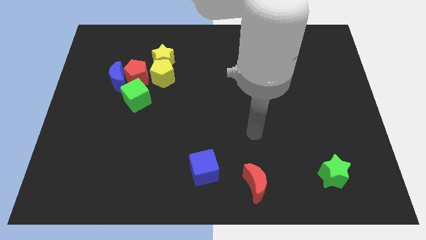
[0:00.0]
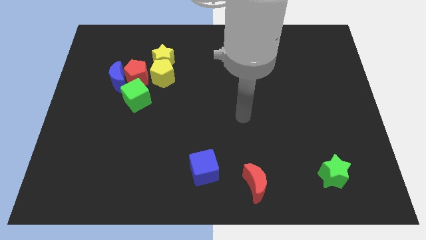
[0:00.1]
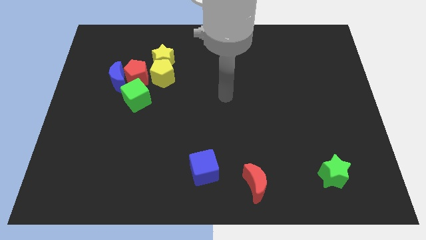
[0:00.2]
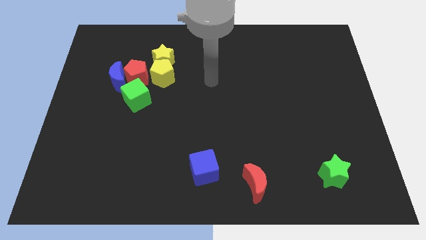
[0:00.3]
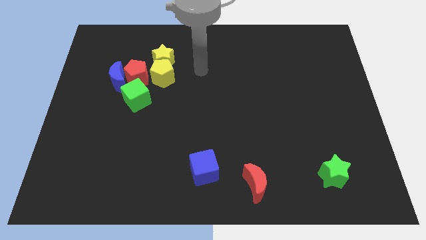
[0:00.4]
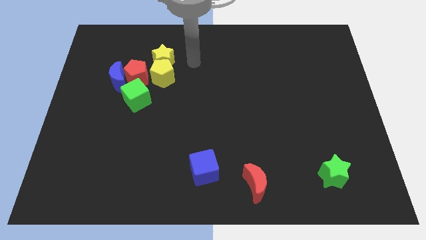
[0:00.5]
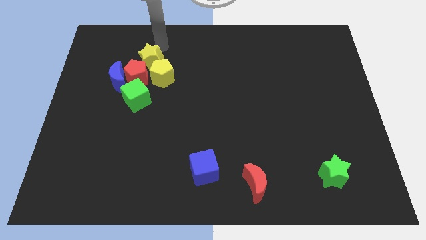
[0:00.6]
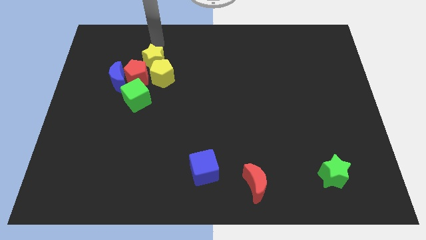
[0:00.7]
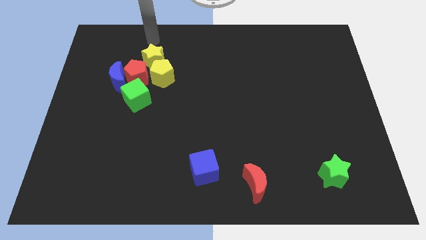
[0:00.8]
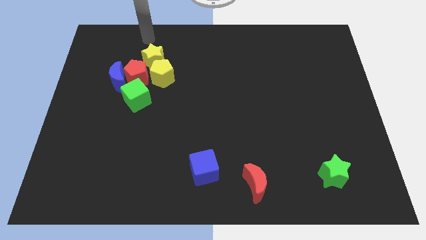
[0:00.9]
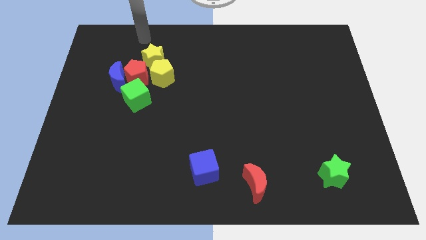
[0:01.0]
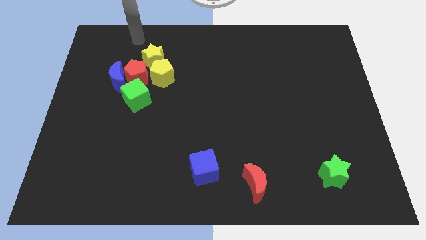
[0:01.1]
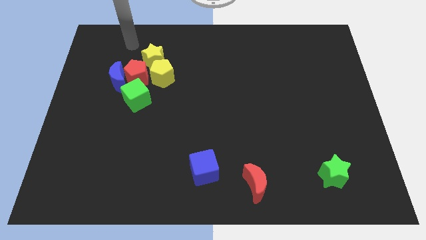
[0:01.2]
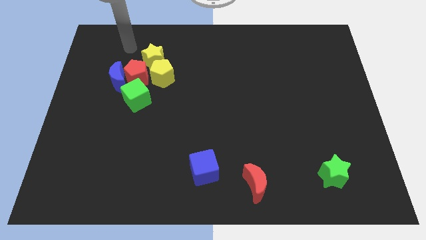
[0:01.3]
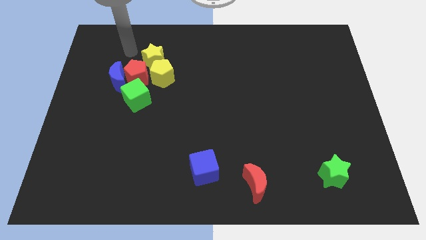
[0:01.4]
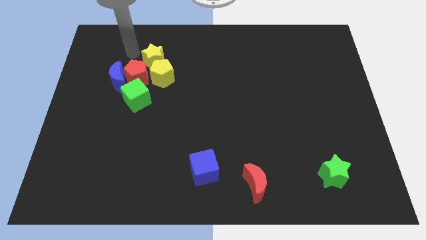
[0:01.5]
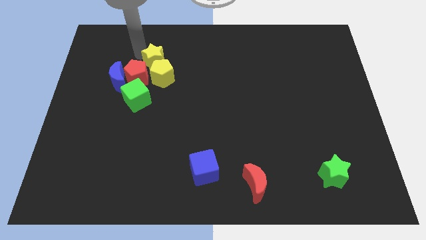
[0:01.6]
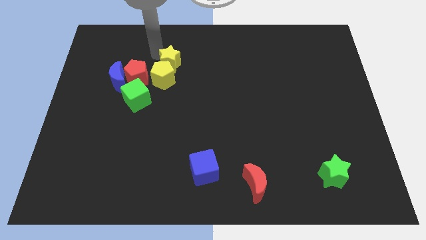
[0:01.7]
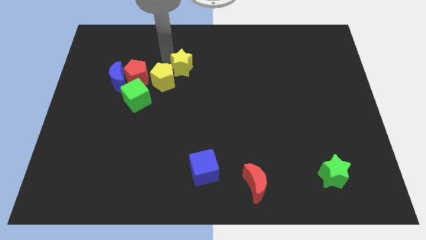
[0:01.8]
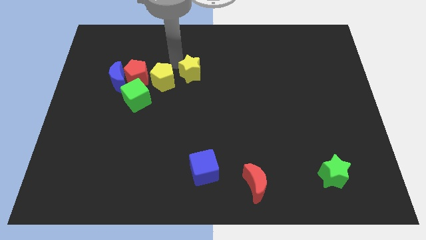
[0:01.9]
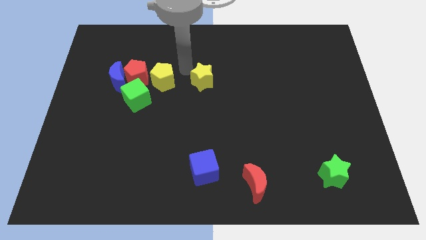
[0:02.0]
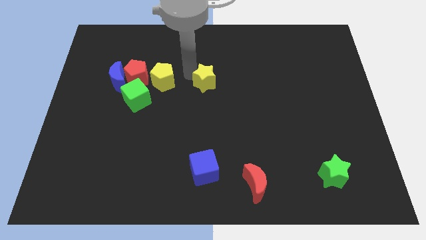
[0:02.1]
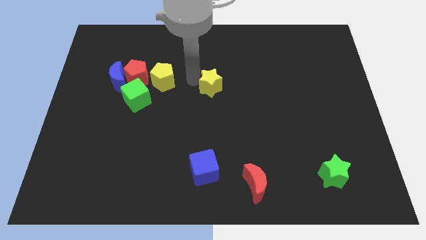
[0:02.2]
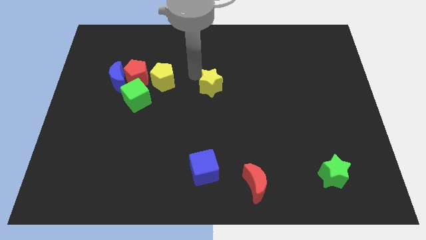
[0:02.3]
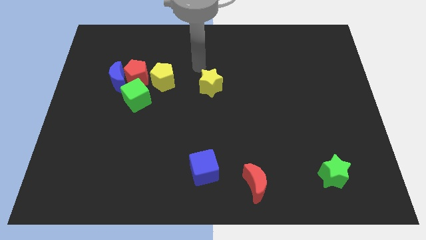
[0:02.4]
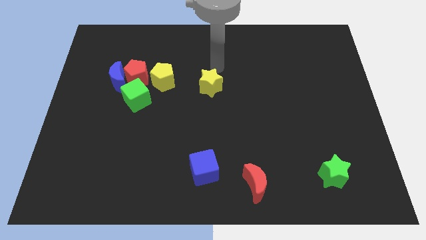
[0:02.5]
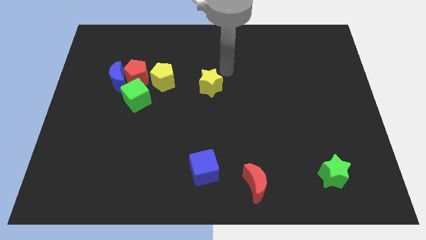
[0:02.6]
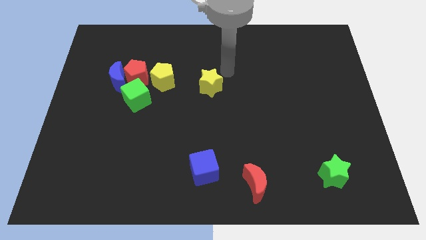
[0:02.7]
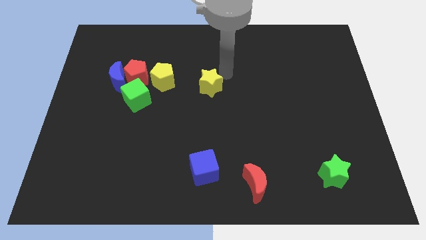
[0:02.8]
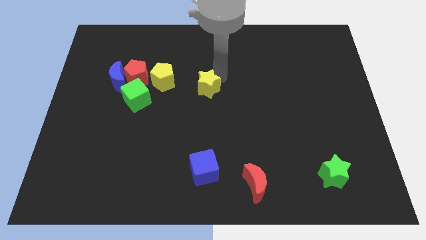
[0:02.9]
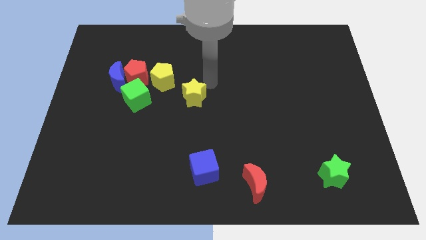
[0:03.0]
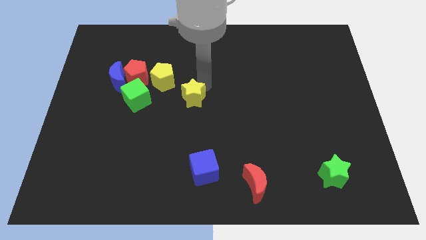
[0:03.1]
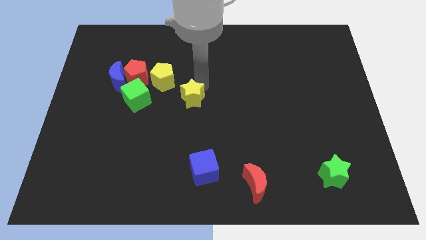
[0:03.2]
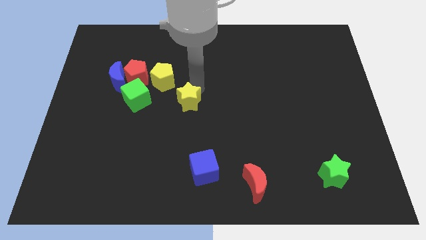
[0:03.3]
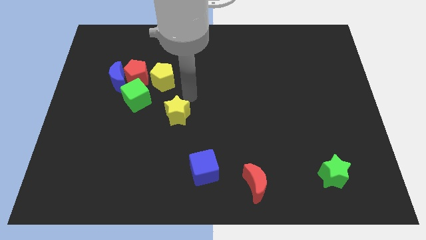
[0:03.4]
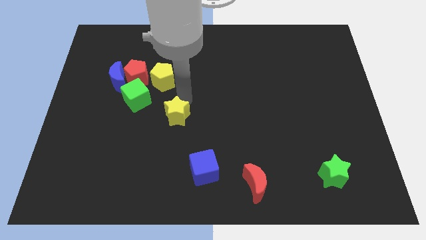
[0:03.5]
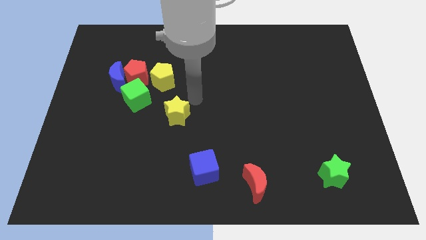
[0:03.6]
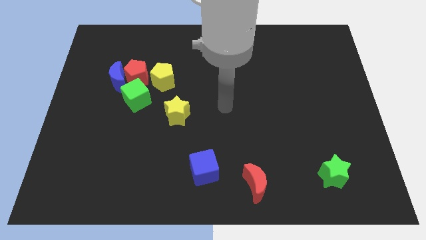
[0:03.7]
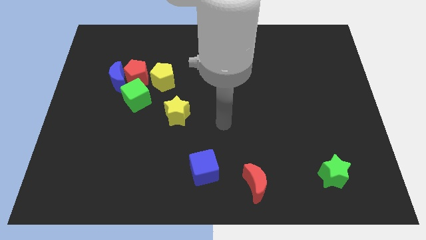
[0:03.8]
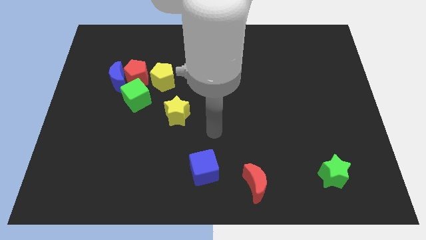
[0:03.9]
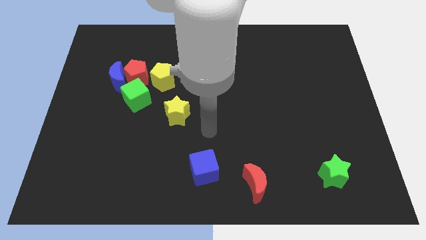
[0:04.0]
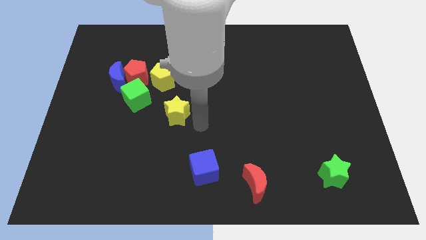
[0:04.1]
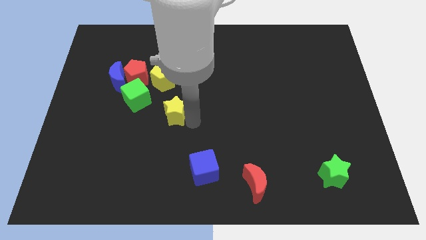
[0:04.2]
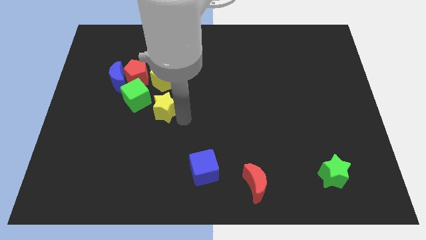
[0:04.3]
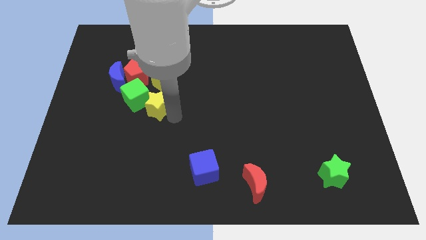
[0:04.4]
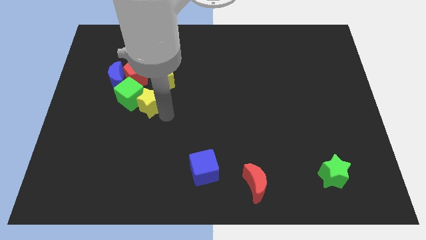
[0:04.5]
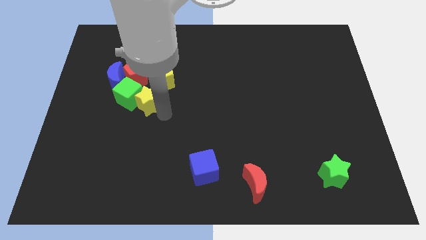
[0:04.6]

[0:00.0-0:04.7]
move the yellow star to the green cube

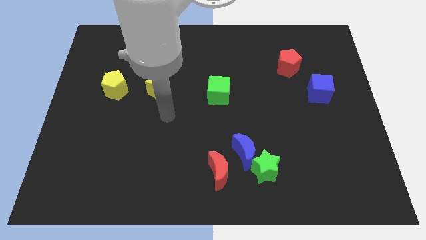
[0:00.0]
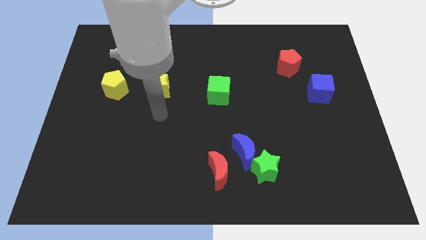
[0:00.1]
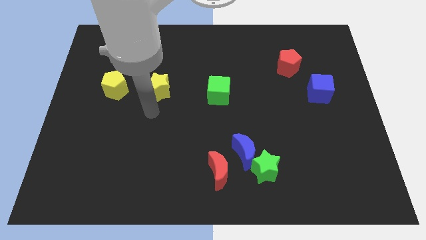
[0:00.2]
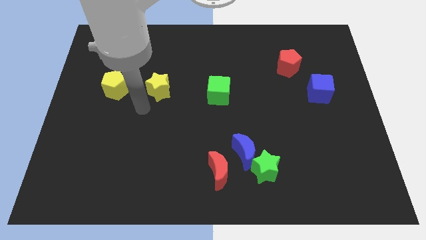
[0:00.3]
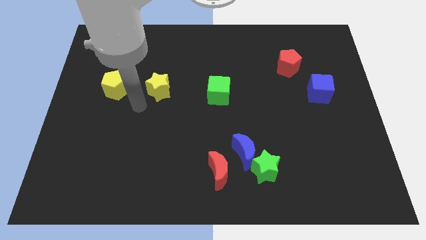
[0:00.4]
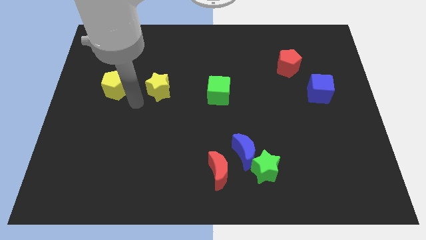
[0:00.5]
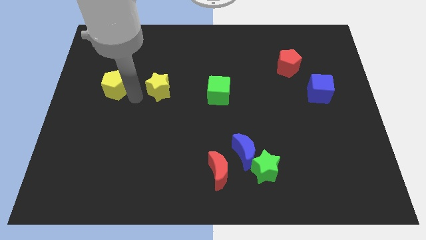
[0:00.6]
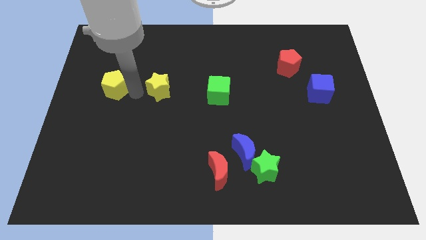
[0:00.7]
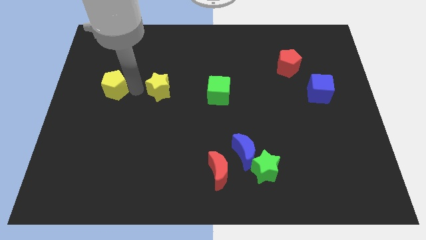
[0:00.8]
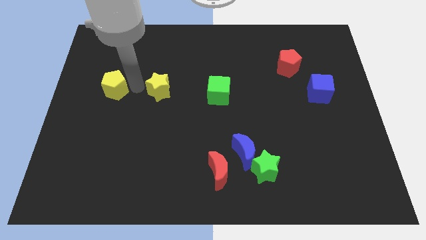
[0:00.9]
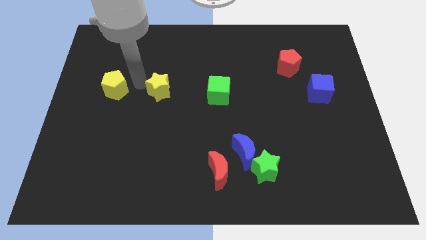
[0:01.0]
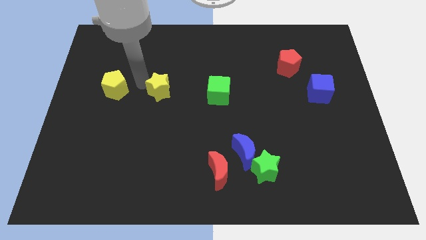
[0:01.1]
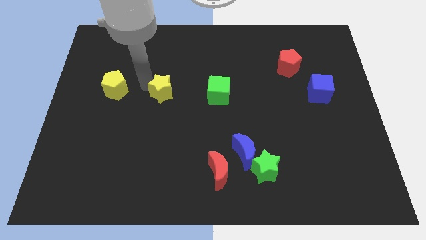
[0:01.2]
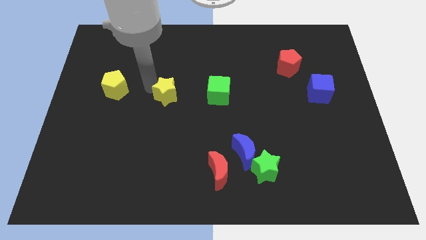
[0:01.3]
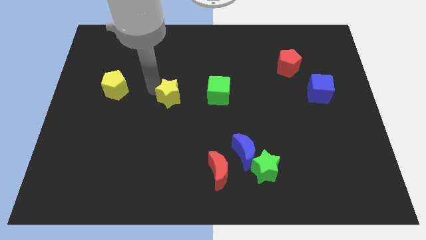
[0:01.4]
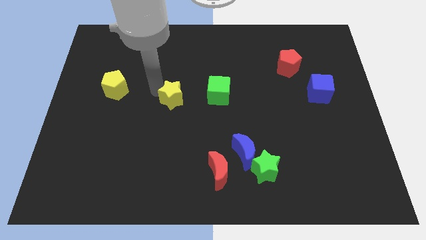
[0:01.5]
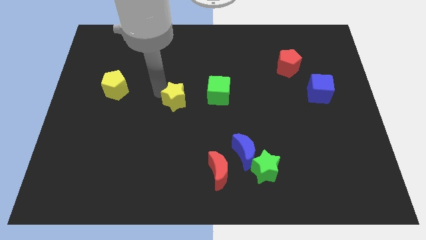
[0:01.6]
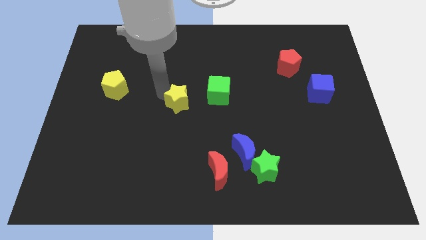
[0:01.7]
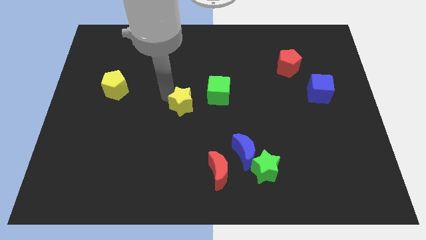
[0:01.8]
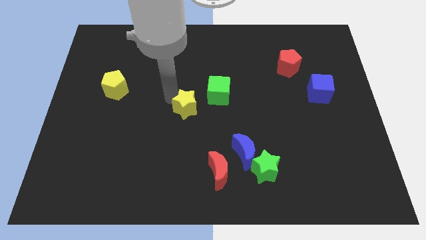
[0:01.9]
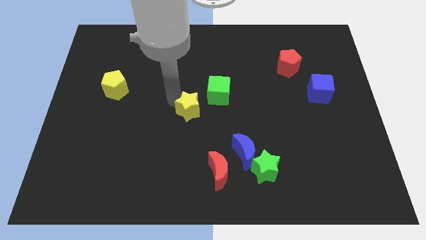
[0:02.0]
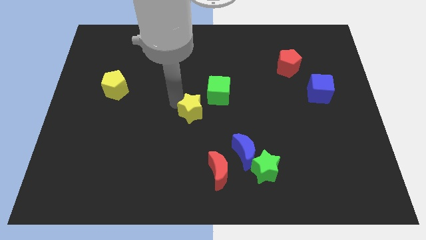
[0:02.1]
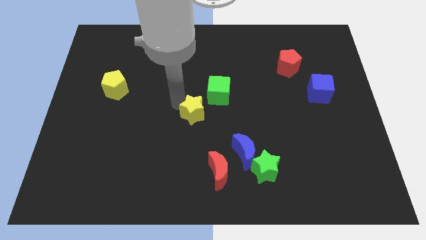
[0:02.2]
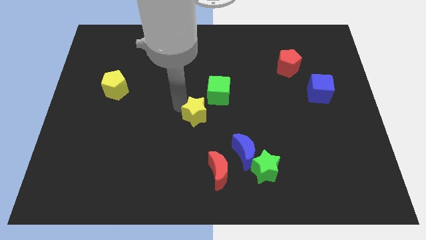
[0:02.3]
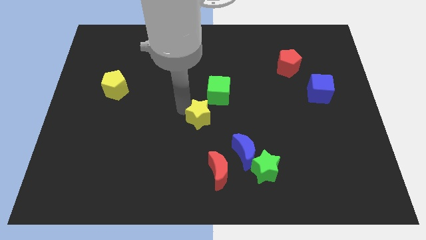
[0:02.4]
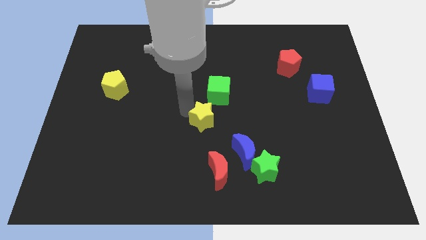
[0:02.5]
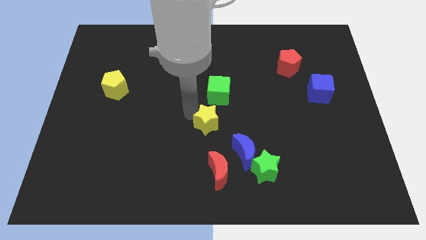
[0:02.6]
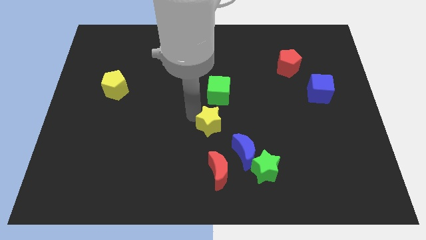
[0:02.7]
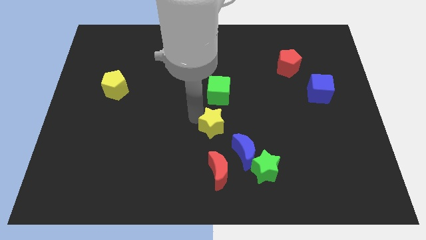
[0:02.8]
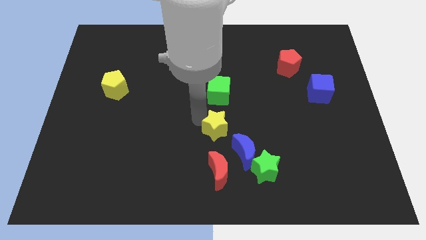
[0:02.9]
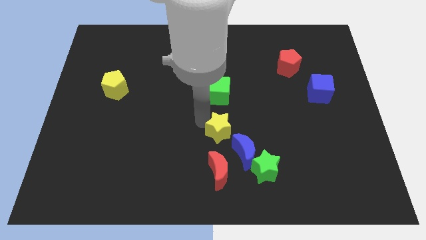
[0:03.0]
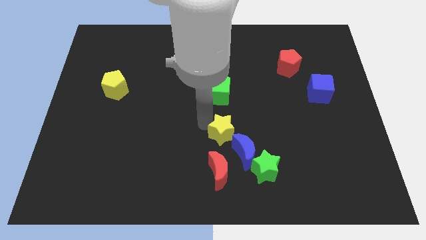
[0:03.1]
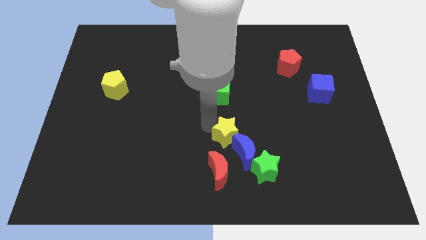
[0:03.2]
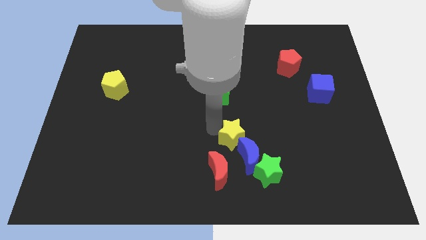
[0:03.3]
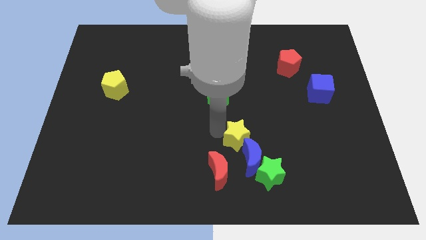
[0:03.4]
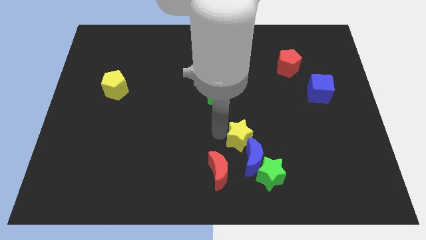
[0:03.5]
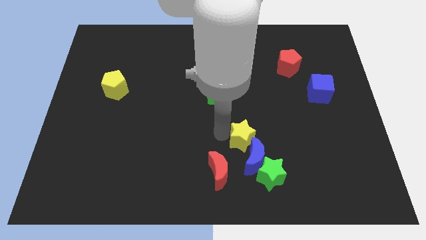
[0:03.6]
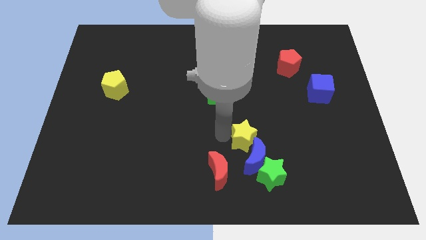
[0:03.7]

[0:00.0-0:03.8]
put the yellow star to the blue moon
